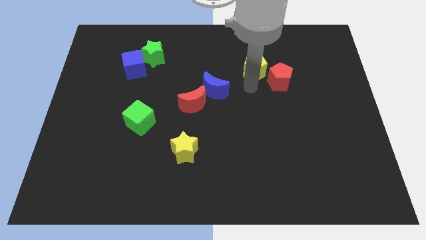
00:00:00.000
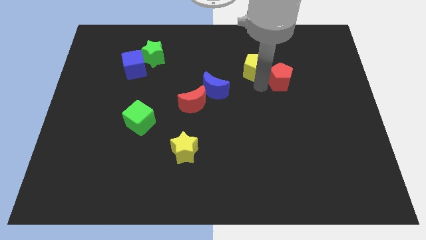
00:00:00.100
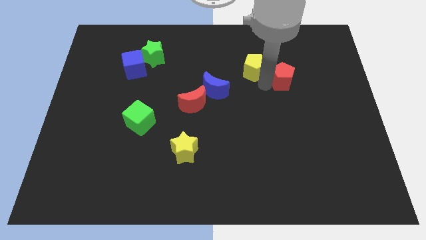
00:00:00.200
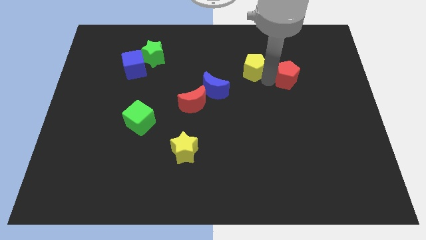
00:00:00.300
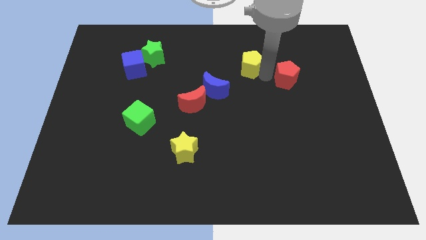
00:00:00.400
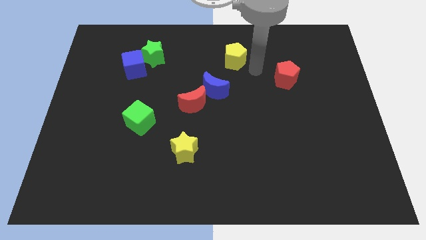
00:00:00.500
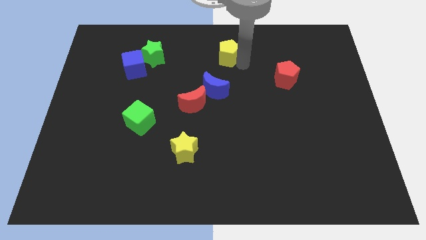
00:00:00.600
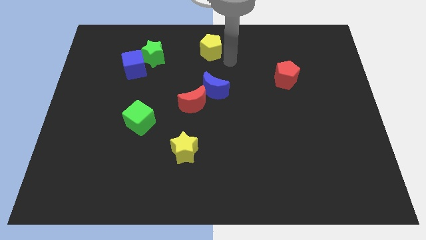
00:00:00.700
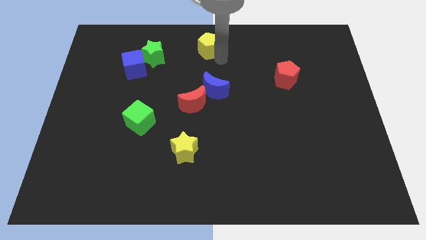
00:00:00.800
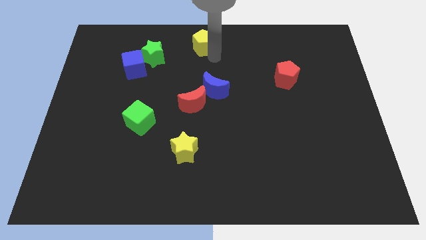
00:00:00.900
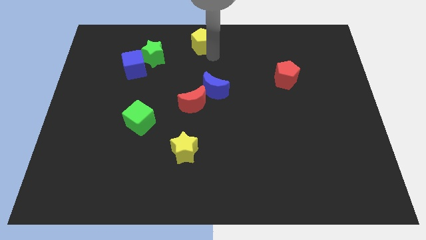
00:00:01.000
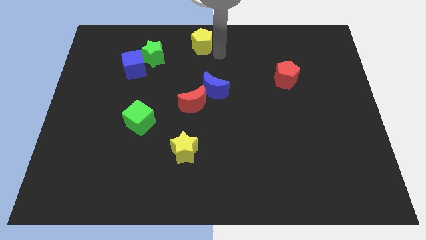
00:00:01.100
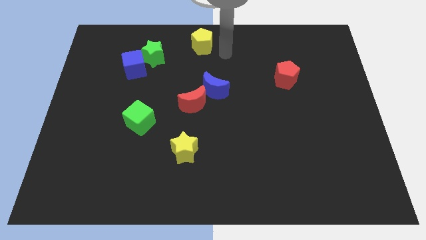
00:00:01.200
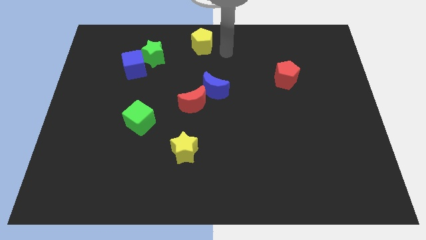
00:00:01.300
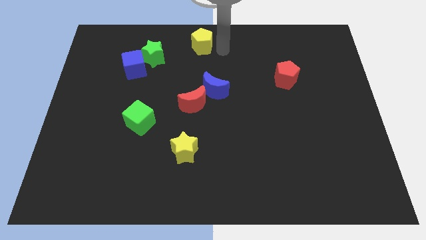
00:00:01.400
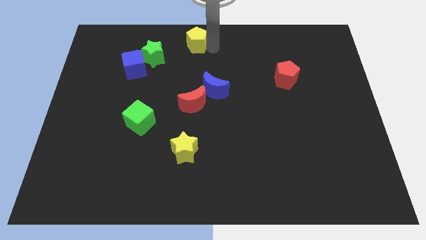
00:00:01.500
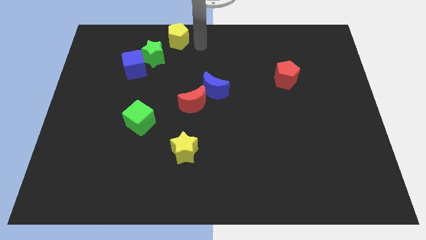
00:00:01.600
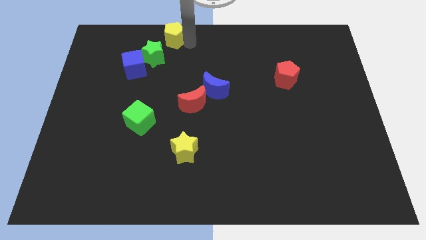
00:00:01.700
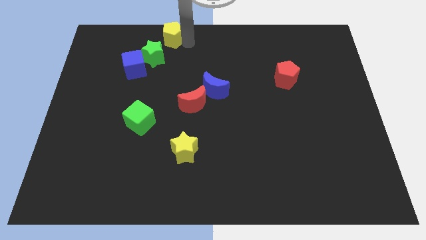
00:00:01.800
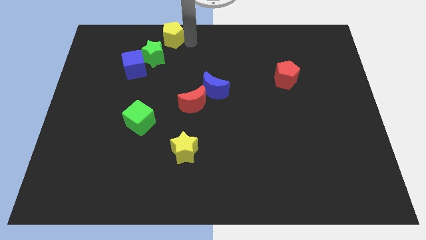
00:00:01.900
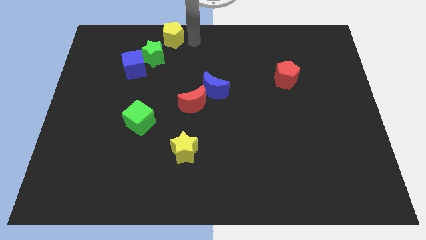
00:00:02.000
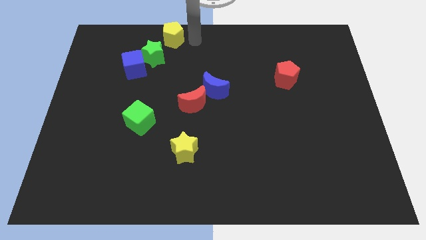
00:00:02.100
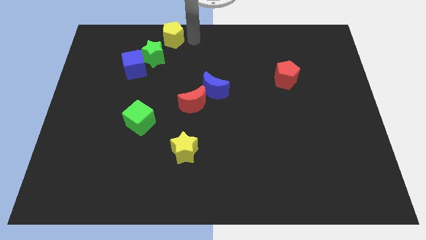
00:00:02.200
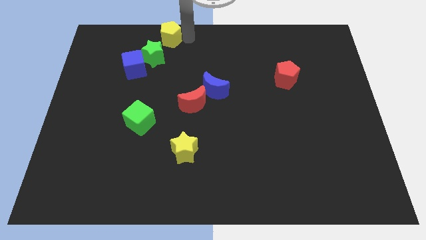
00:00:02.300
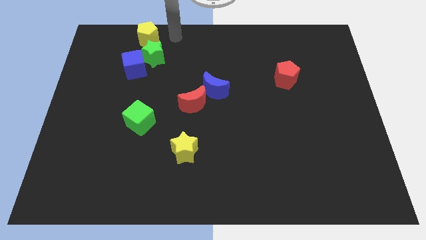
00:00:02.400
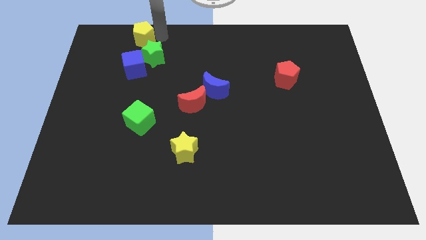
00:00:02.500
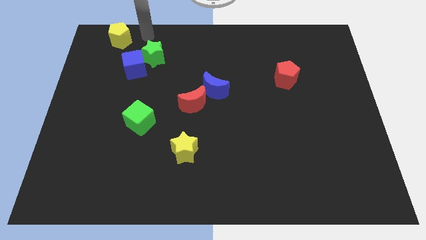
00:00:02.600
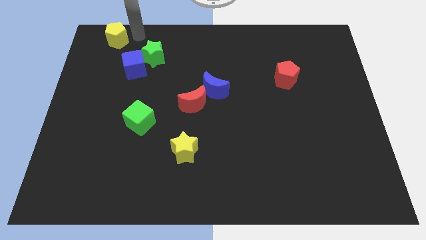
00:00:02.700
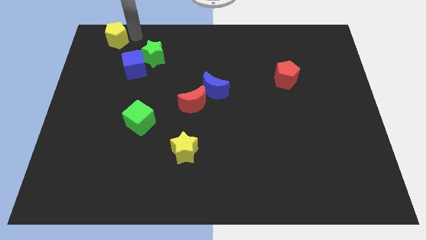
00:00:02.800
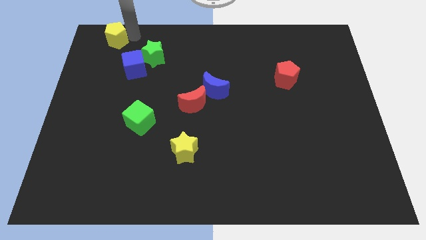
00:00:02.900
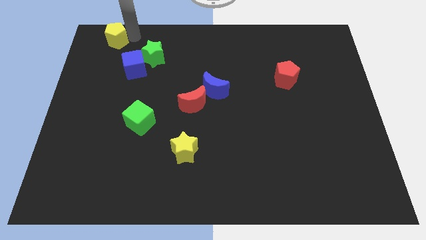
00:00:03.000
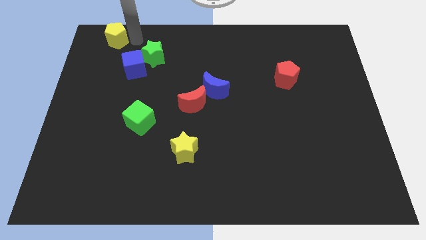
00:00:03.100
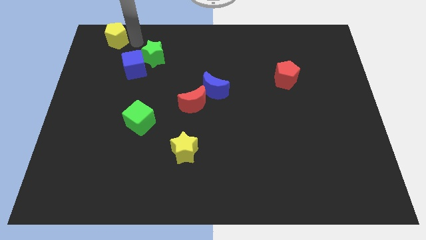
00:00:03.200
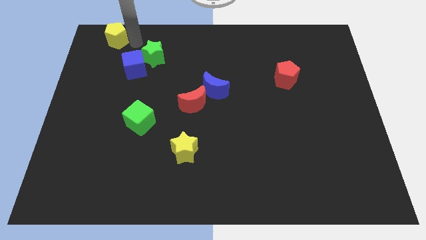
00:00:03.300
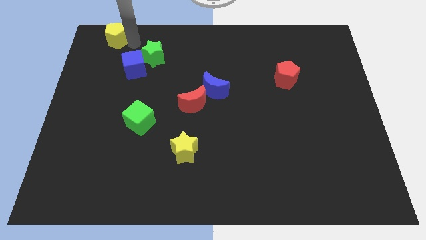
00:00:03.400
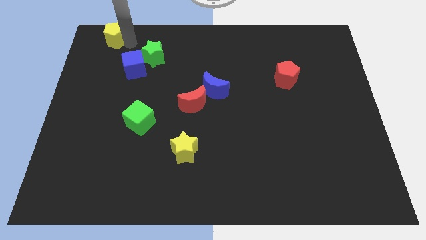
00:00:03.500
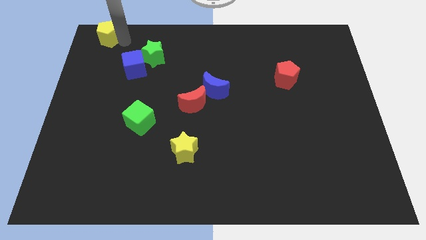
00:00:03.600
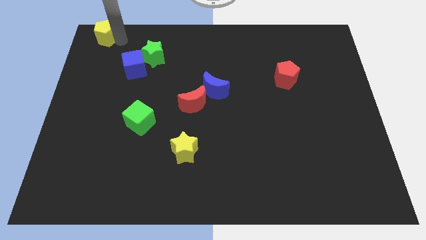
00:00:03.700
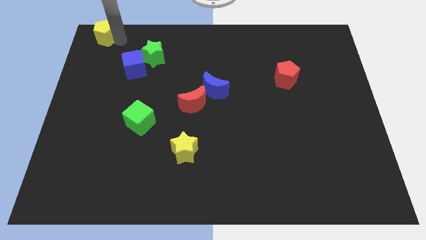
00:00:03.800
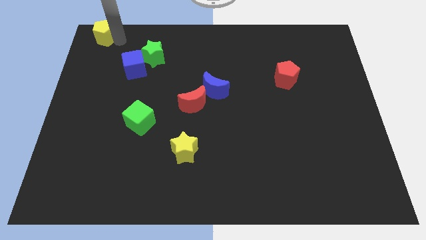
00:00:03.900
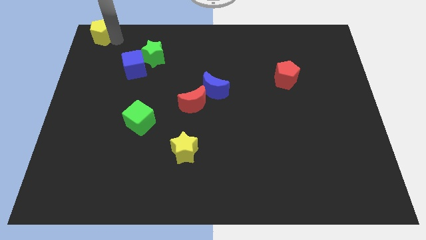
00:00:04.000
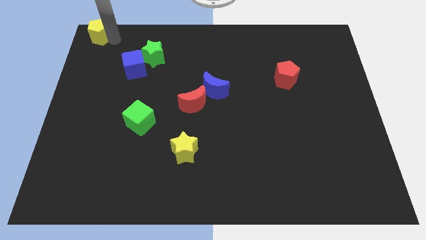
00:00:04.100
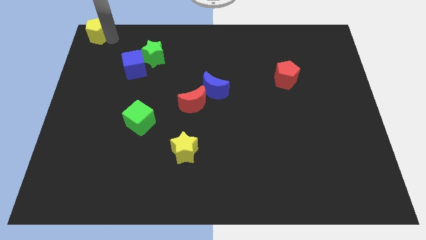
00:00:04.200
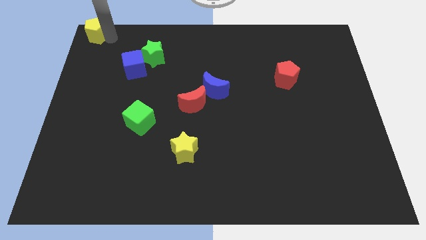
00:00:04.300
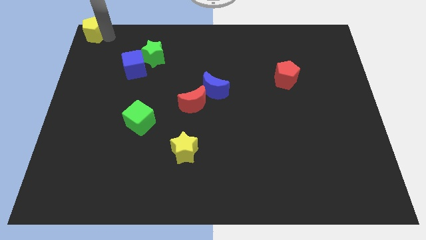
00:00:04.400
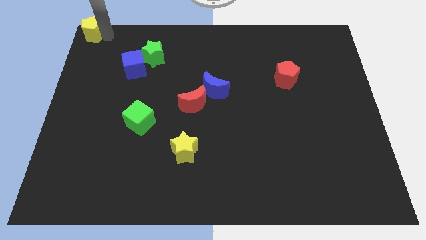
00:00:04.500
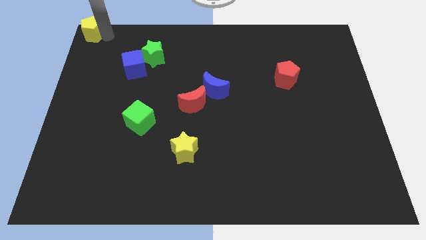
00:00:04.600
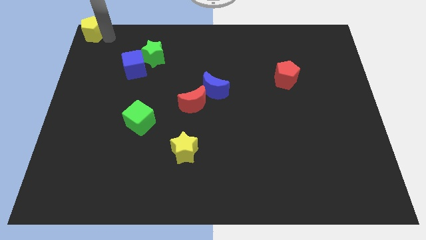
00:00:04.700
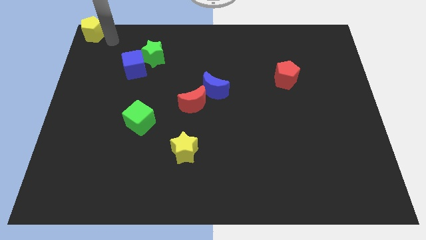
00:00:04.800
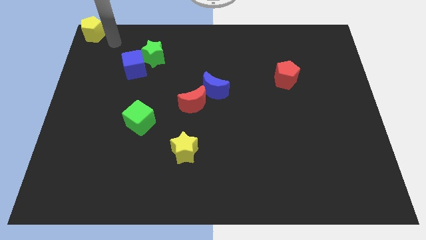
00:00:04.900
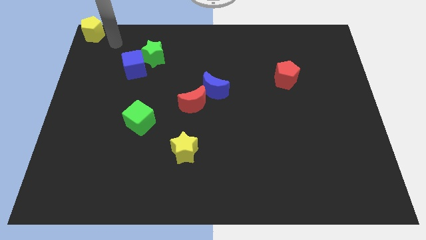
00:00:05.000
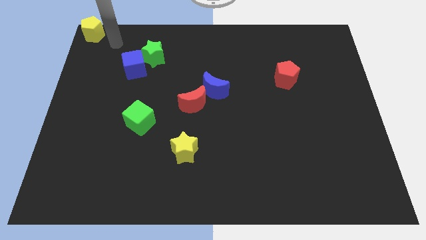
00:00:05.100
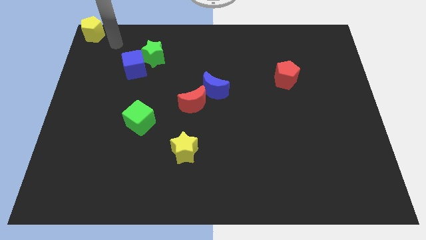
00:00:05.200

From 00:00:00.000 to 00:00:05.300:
push the yellow pentagon to the top left corner of the board

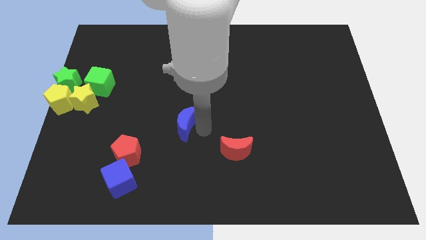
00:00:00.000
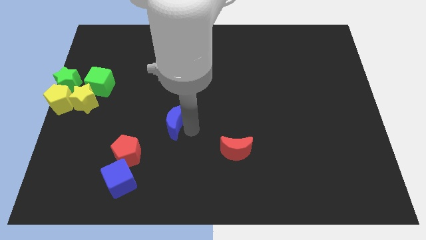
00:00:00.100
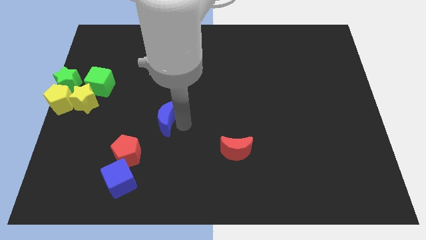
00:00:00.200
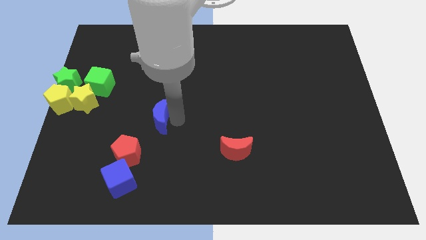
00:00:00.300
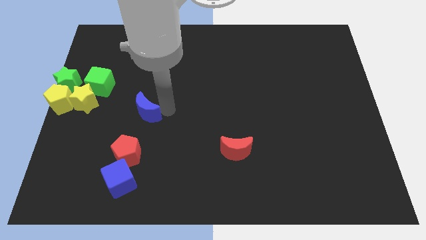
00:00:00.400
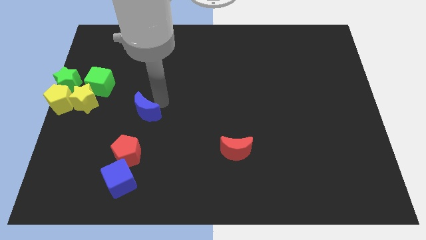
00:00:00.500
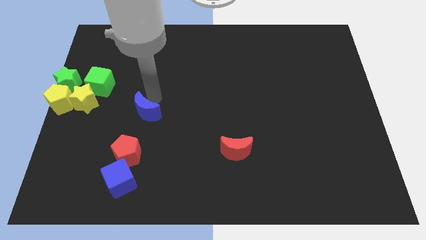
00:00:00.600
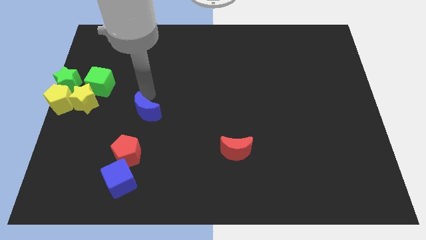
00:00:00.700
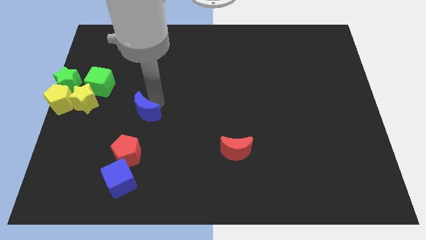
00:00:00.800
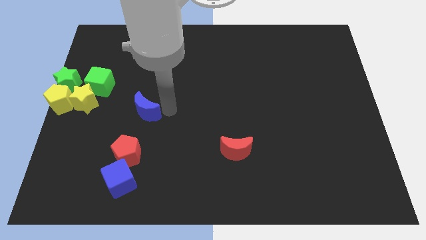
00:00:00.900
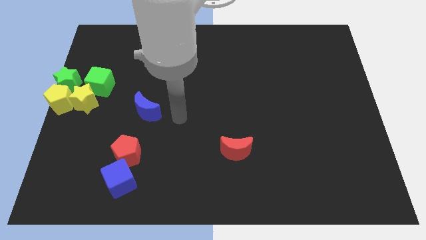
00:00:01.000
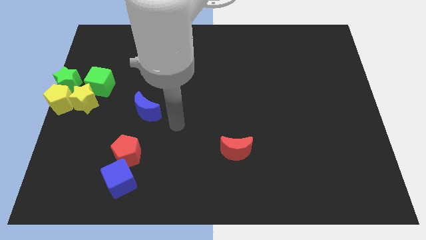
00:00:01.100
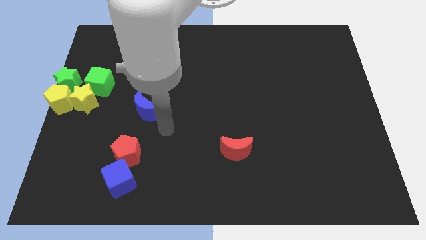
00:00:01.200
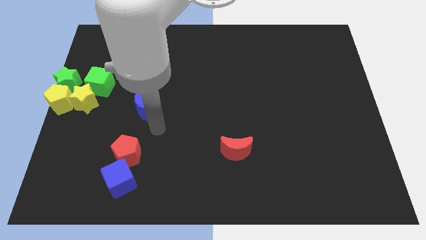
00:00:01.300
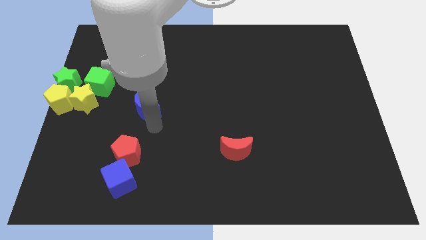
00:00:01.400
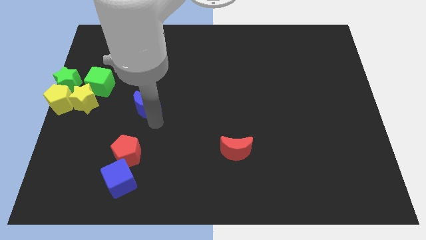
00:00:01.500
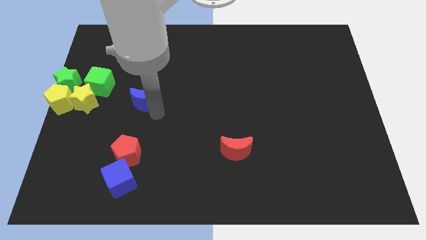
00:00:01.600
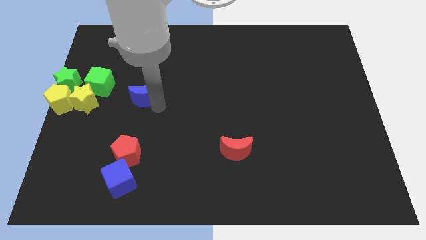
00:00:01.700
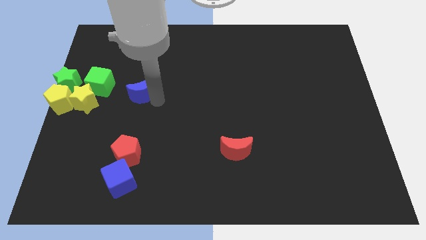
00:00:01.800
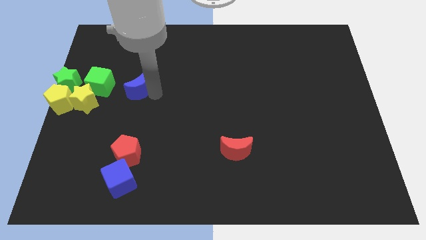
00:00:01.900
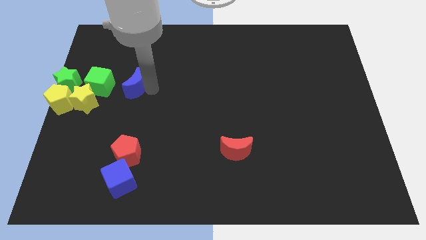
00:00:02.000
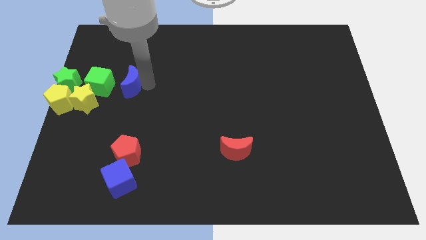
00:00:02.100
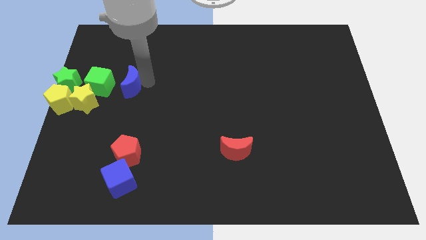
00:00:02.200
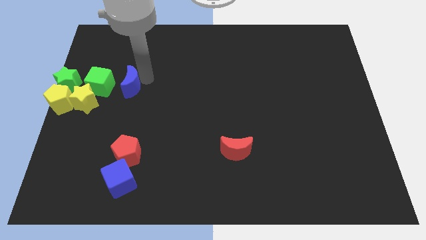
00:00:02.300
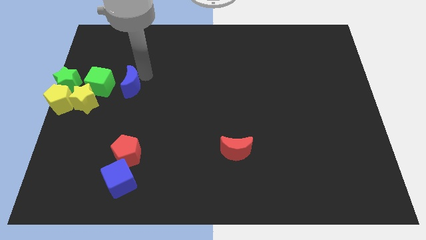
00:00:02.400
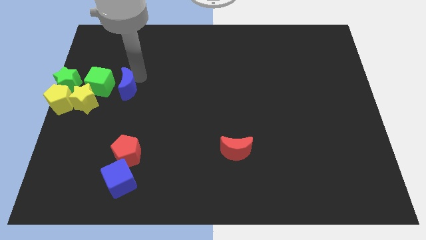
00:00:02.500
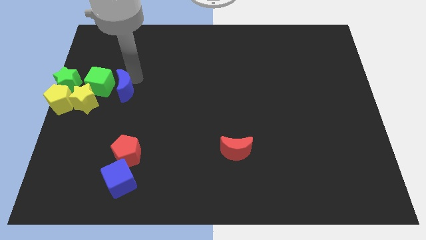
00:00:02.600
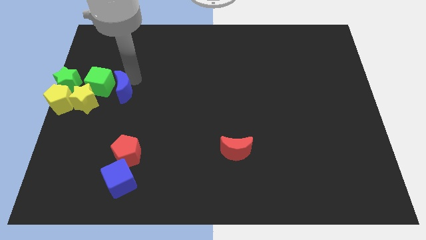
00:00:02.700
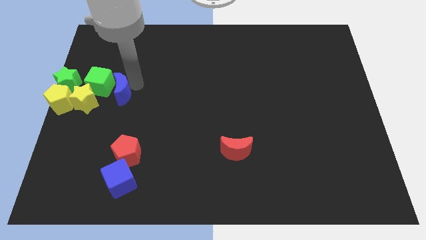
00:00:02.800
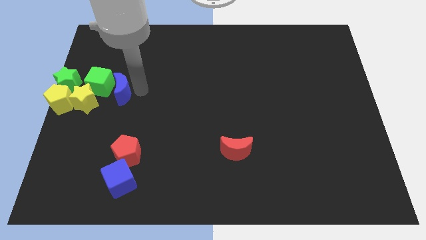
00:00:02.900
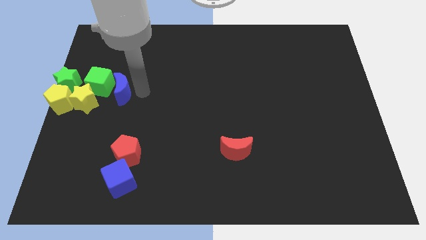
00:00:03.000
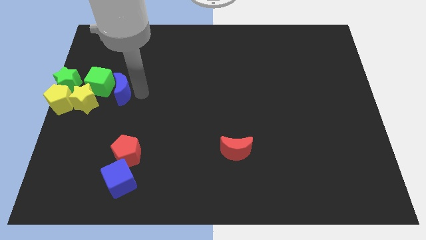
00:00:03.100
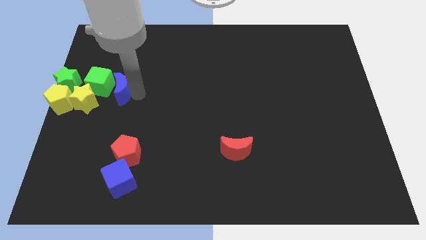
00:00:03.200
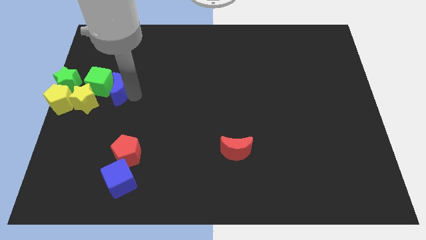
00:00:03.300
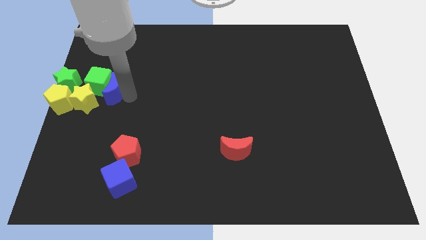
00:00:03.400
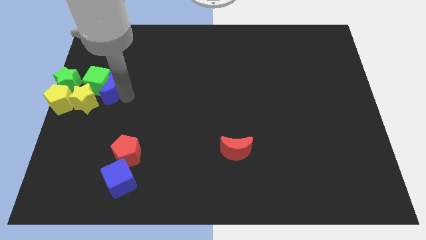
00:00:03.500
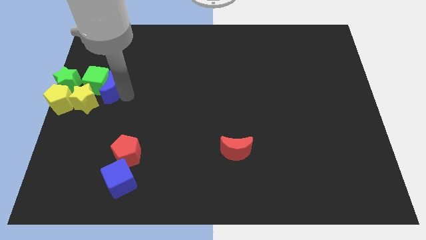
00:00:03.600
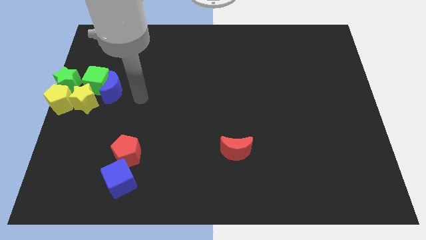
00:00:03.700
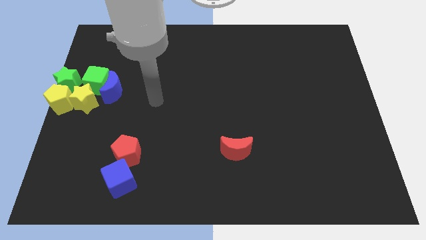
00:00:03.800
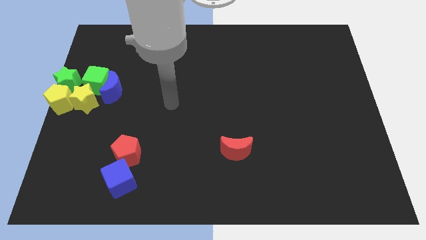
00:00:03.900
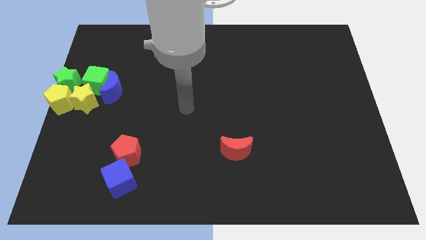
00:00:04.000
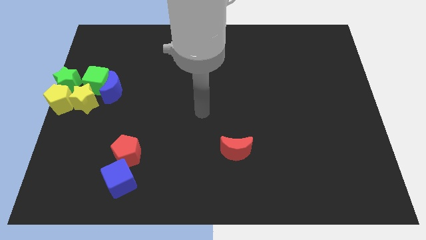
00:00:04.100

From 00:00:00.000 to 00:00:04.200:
push the blue crescent to the group of blocks
